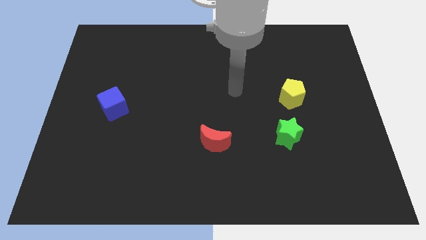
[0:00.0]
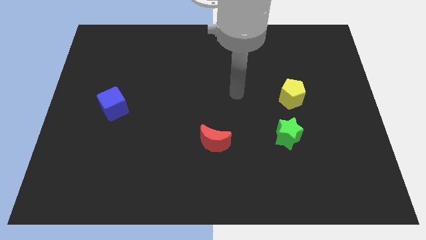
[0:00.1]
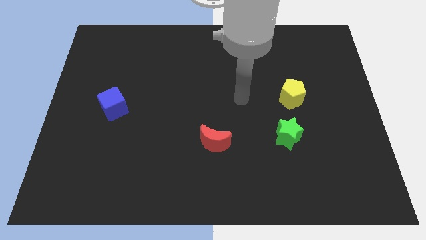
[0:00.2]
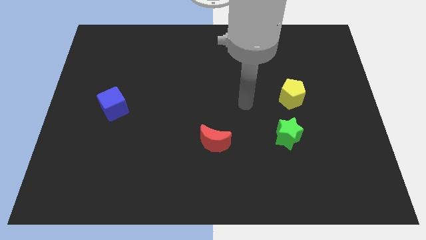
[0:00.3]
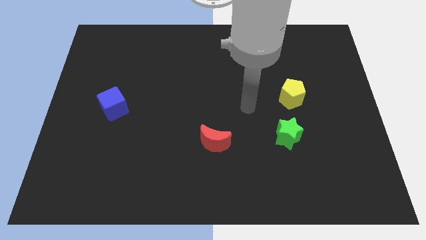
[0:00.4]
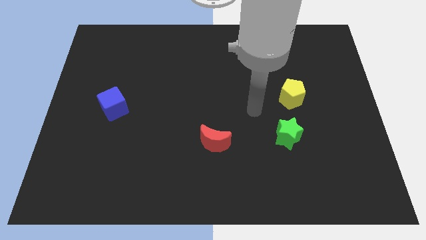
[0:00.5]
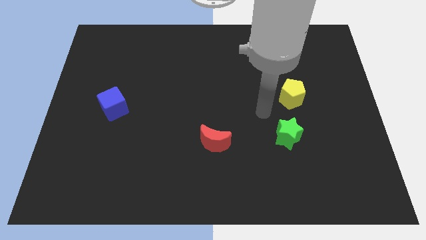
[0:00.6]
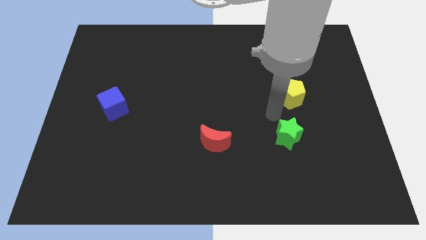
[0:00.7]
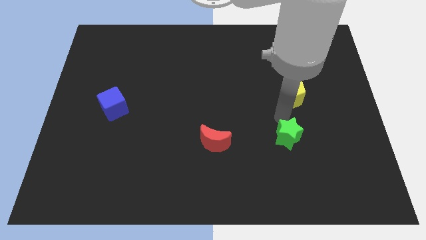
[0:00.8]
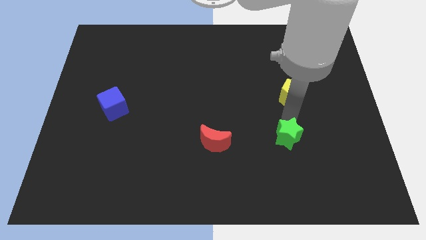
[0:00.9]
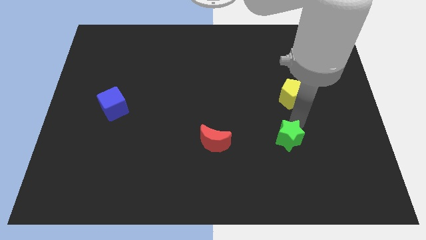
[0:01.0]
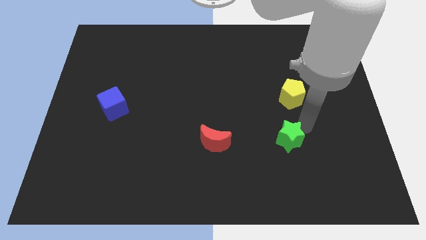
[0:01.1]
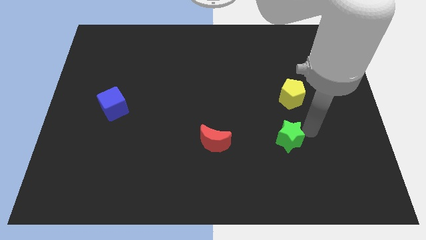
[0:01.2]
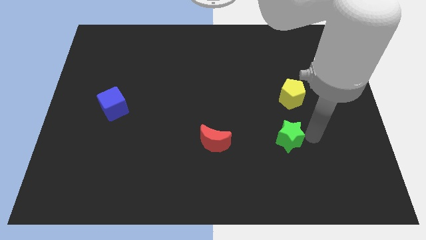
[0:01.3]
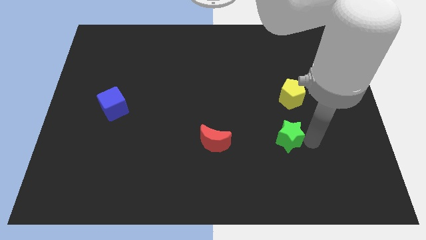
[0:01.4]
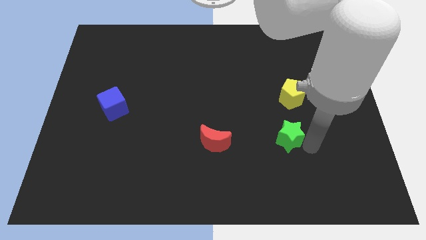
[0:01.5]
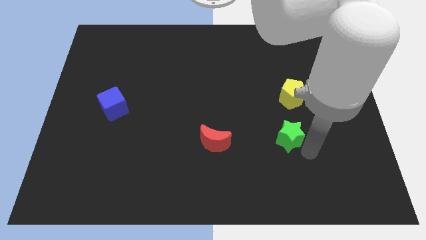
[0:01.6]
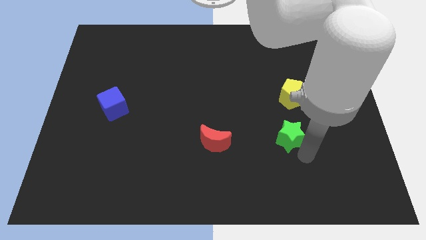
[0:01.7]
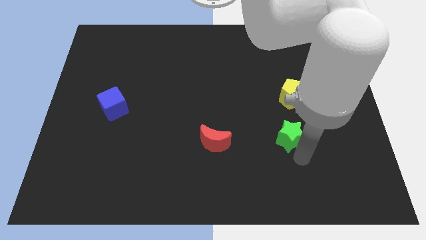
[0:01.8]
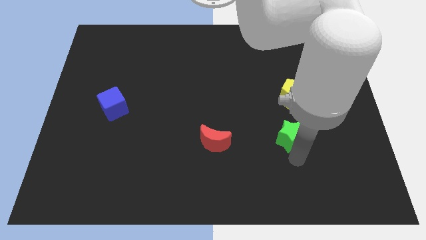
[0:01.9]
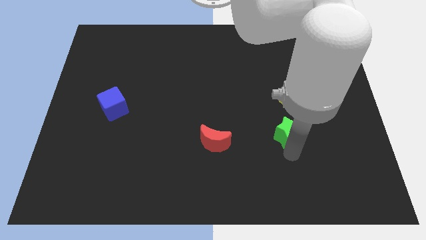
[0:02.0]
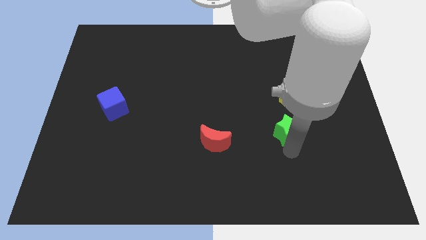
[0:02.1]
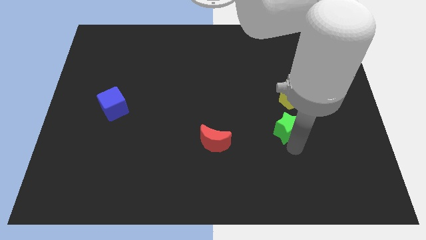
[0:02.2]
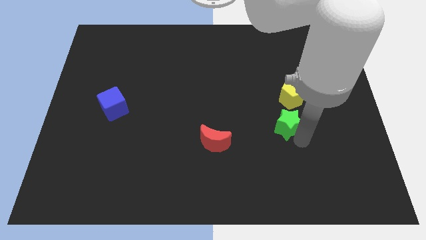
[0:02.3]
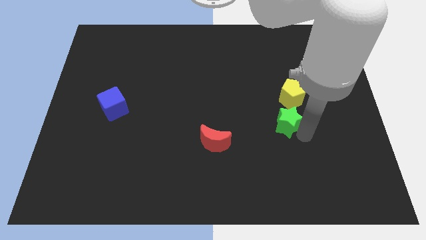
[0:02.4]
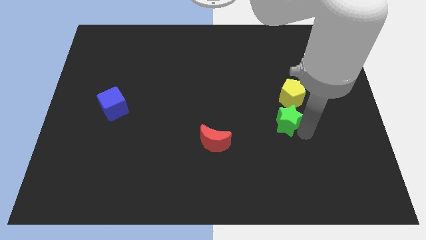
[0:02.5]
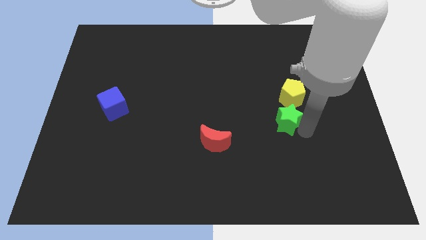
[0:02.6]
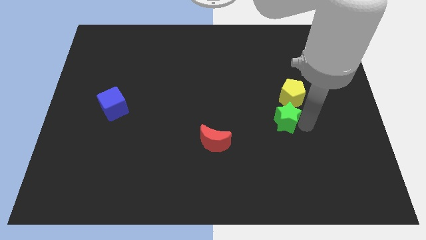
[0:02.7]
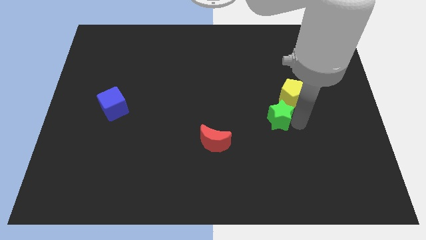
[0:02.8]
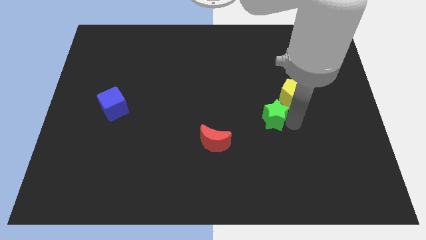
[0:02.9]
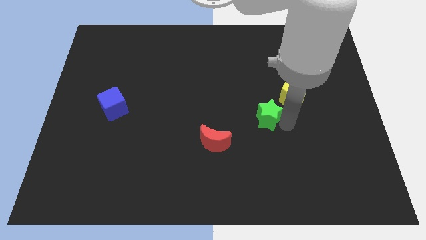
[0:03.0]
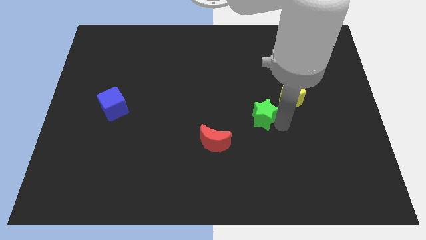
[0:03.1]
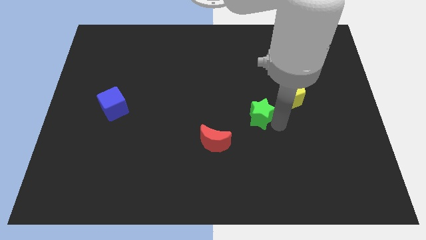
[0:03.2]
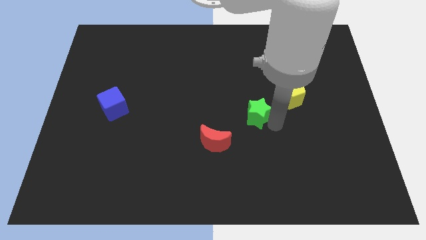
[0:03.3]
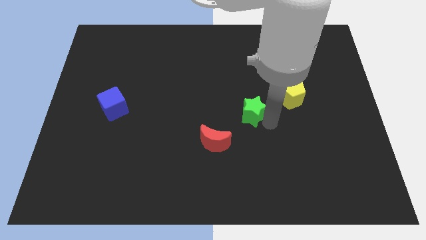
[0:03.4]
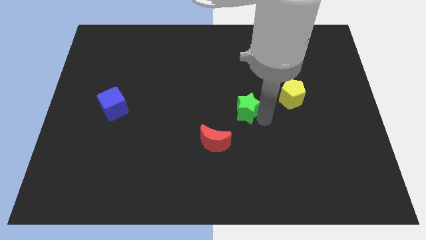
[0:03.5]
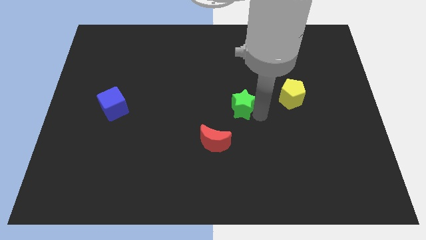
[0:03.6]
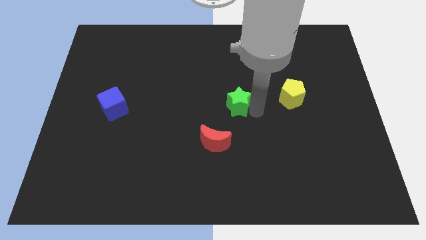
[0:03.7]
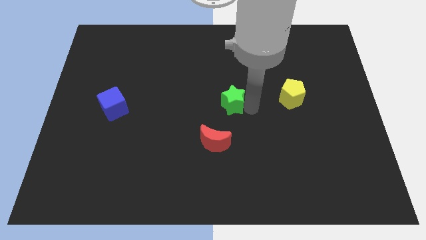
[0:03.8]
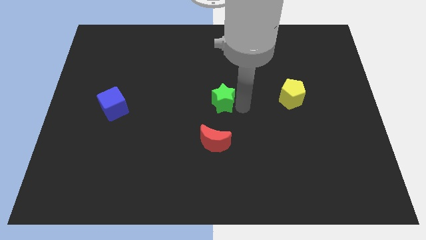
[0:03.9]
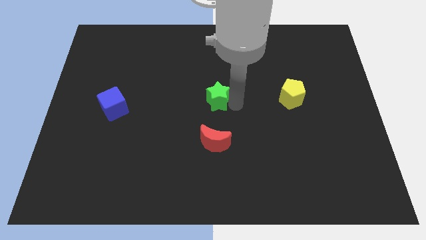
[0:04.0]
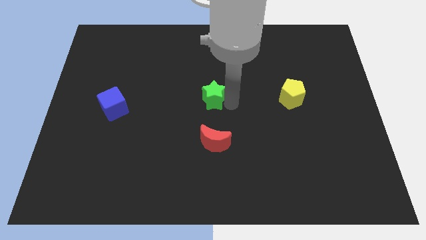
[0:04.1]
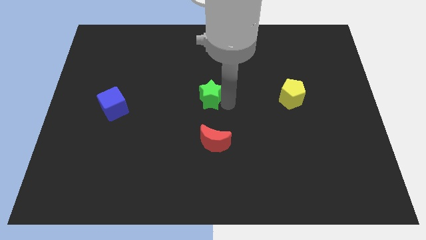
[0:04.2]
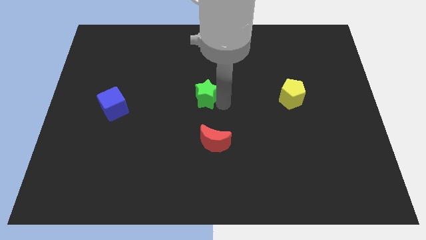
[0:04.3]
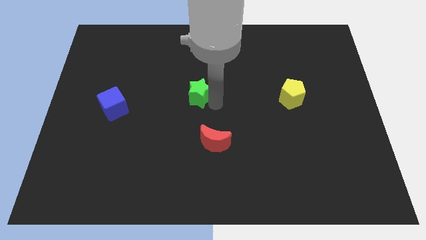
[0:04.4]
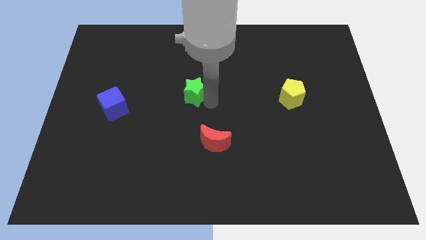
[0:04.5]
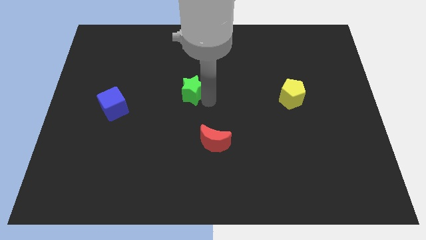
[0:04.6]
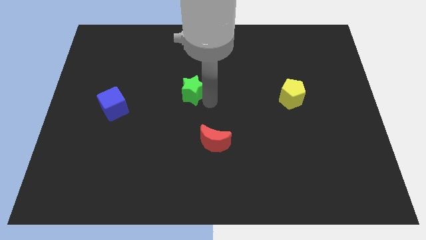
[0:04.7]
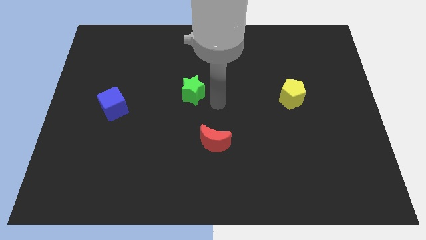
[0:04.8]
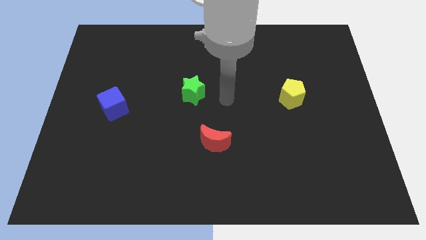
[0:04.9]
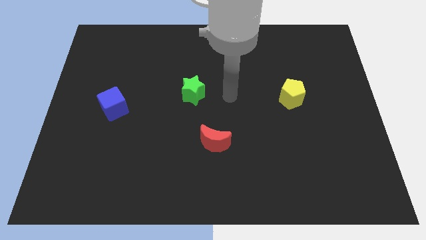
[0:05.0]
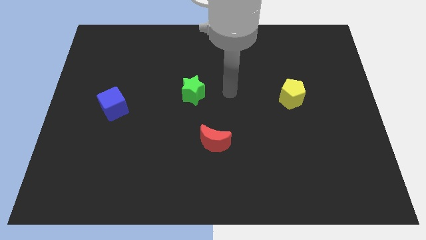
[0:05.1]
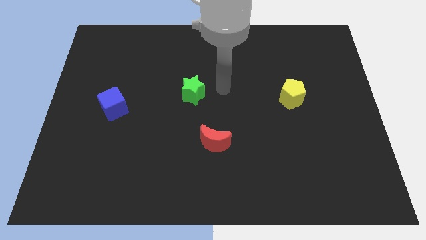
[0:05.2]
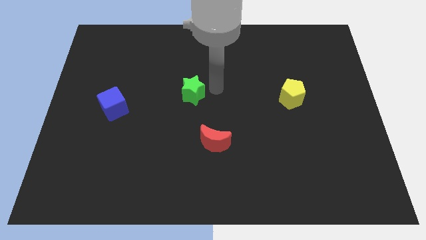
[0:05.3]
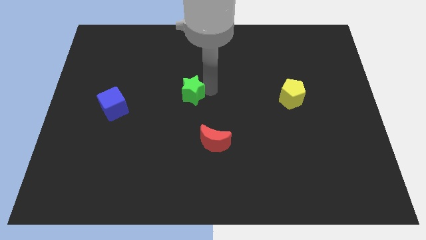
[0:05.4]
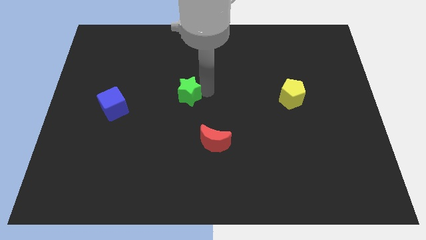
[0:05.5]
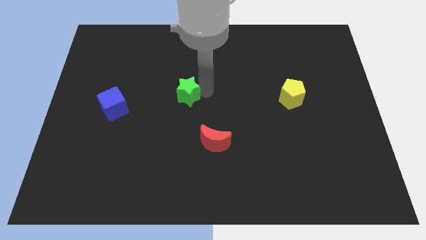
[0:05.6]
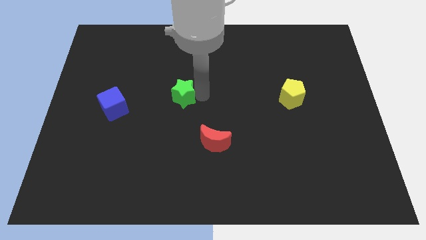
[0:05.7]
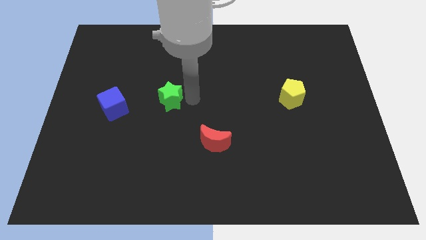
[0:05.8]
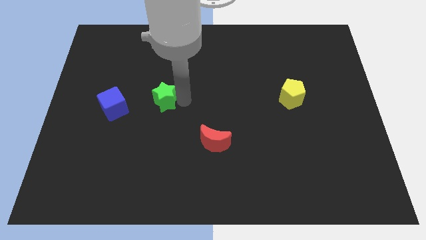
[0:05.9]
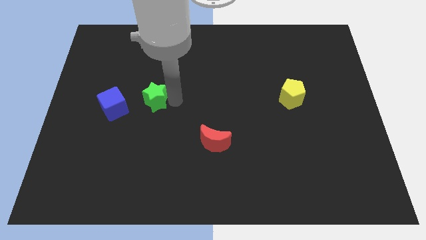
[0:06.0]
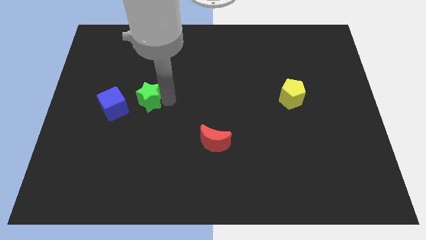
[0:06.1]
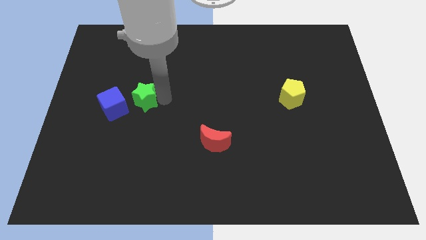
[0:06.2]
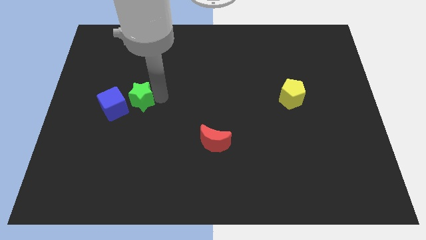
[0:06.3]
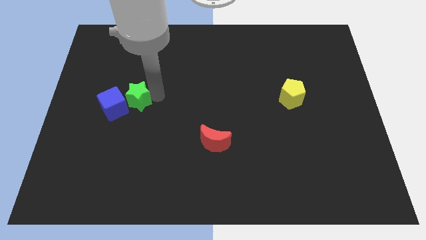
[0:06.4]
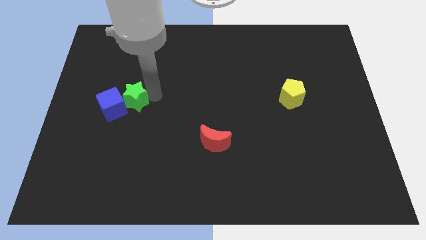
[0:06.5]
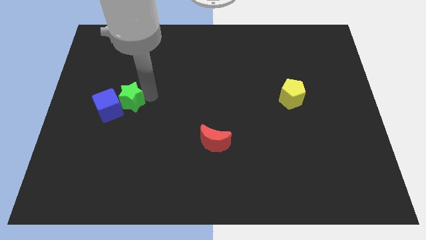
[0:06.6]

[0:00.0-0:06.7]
push the green star close to the cube

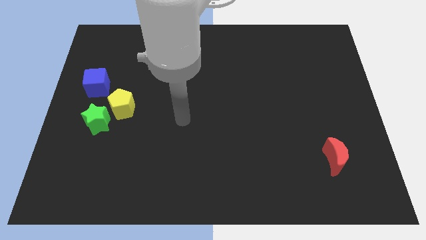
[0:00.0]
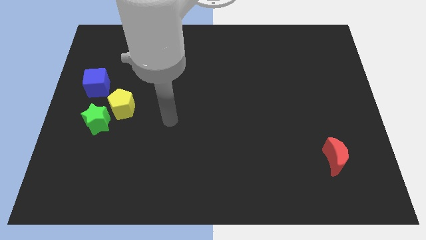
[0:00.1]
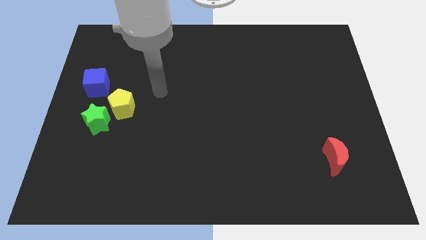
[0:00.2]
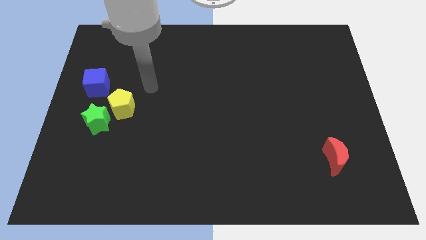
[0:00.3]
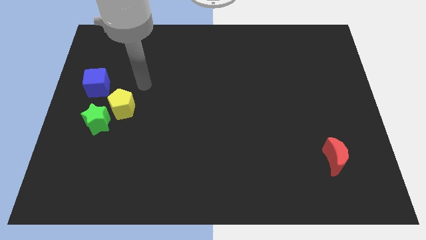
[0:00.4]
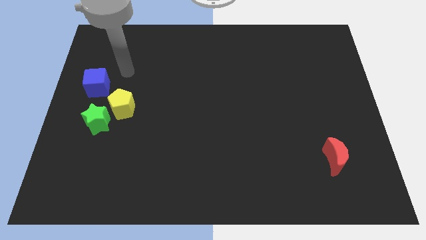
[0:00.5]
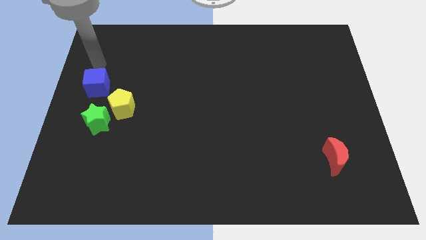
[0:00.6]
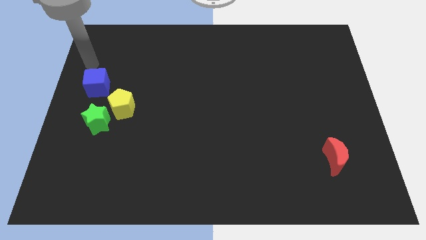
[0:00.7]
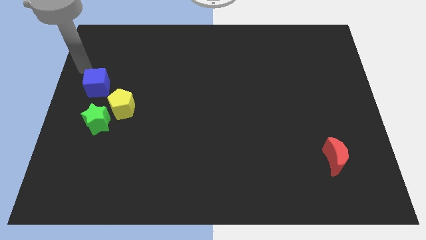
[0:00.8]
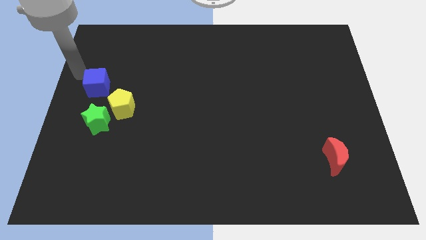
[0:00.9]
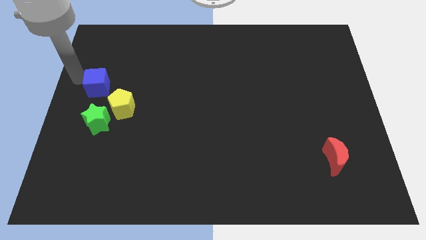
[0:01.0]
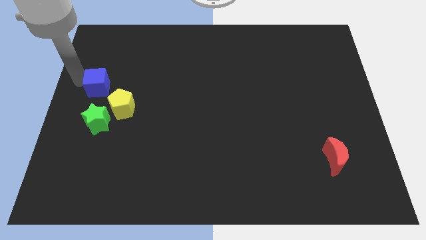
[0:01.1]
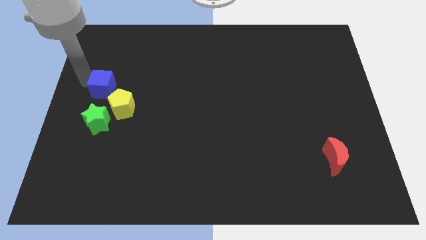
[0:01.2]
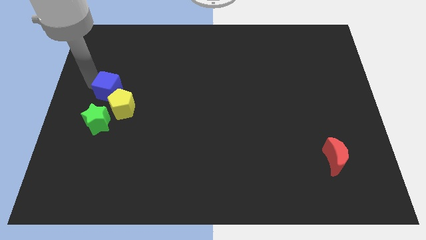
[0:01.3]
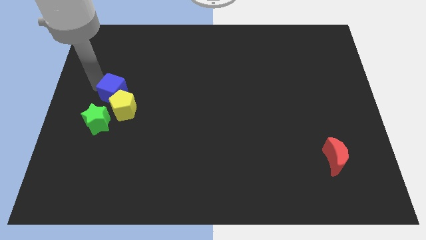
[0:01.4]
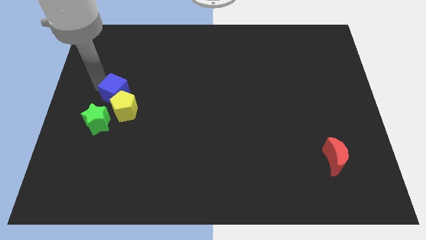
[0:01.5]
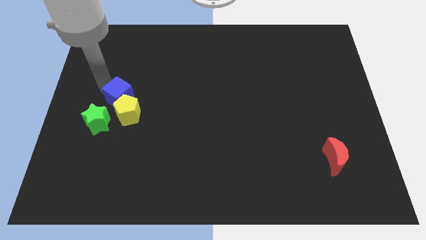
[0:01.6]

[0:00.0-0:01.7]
move the blue cube next to the yellow block

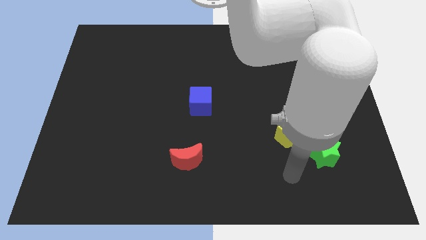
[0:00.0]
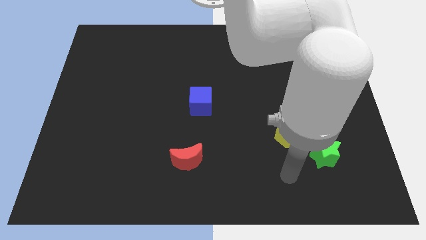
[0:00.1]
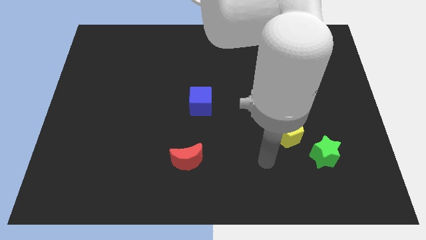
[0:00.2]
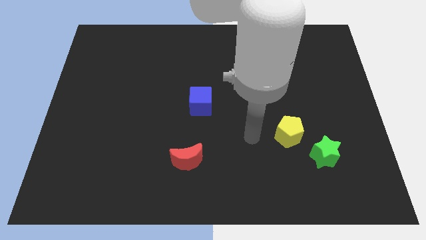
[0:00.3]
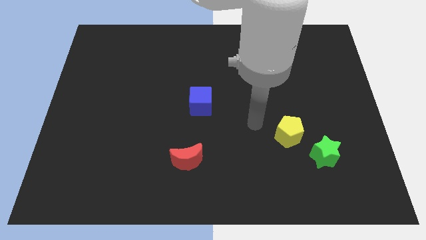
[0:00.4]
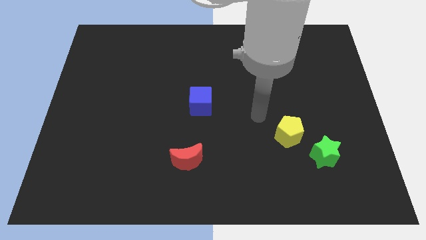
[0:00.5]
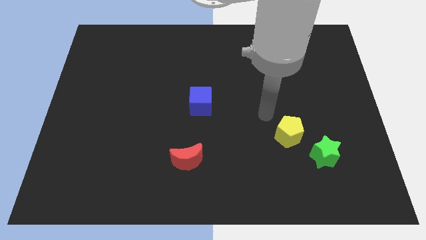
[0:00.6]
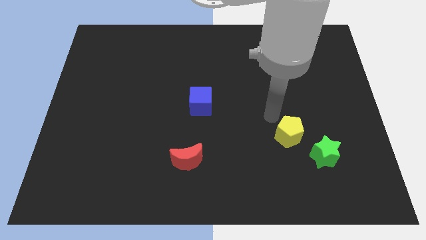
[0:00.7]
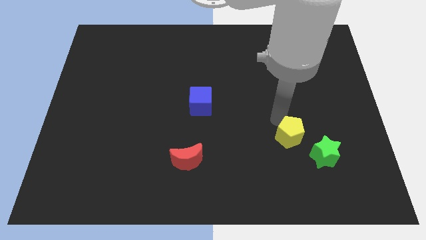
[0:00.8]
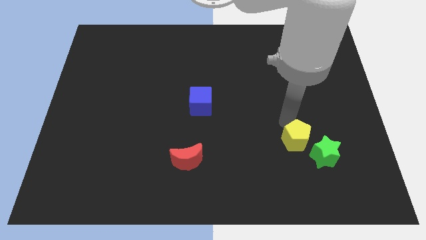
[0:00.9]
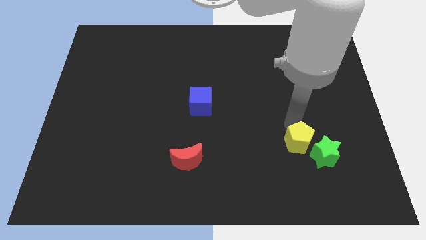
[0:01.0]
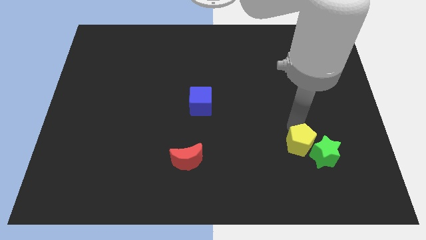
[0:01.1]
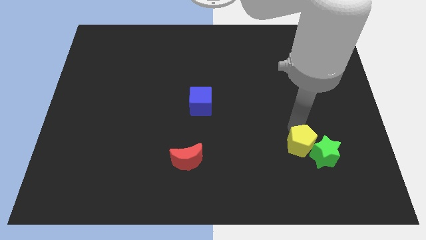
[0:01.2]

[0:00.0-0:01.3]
push the yellow block to the green star
